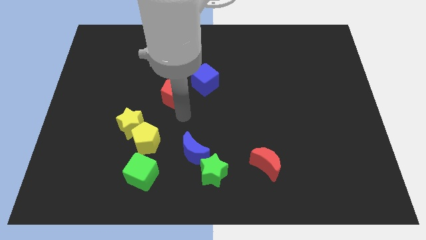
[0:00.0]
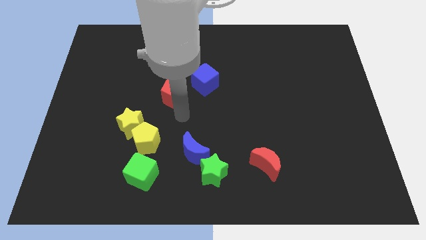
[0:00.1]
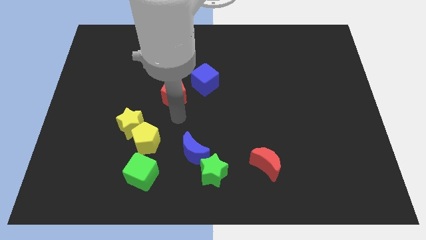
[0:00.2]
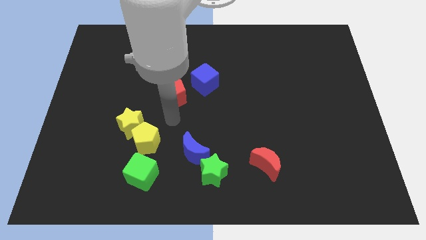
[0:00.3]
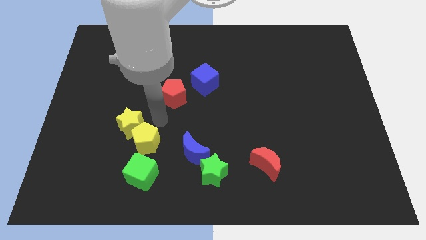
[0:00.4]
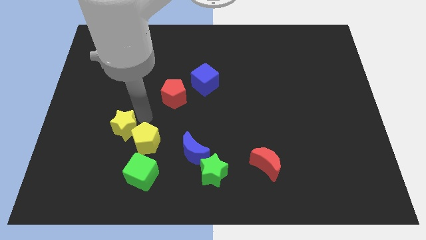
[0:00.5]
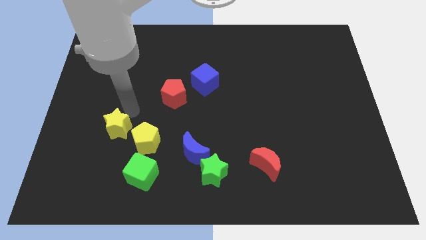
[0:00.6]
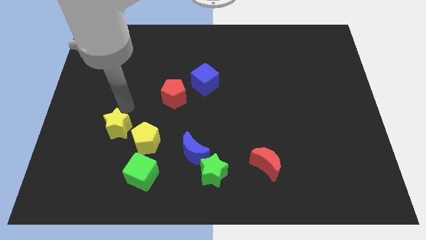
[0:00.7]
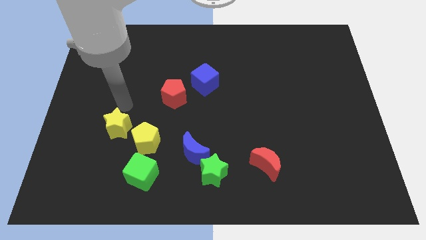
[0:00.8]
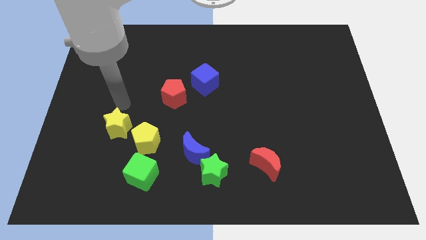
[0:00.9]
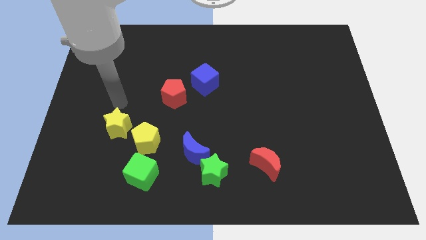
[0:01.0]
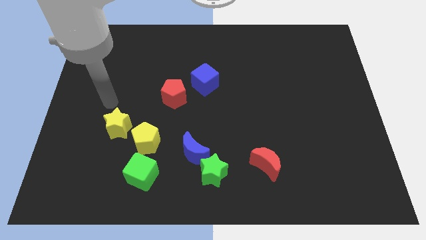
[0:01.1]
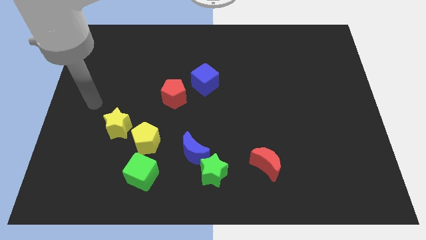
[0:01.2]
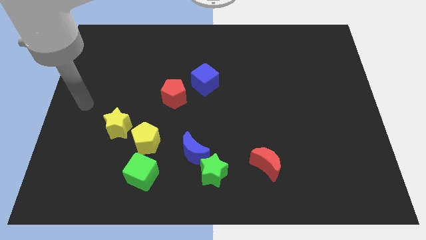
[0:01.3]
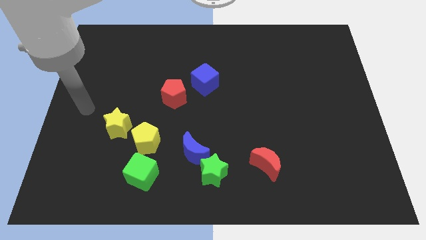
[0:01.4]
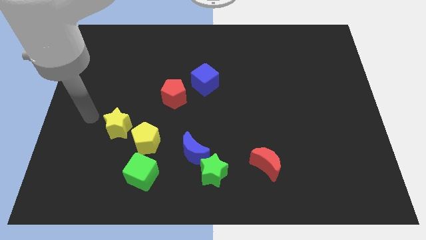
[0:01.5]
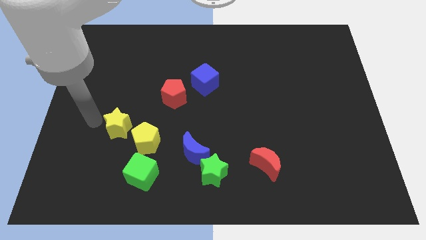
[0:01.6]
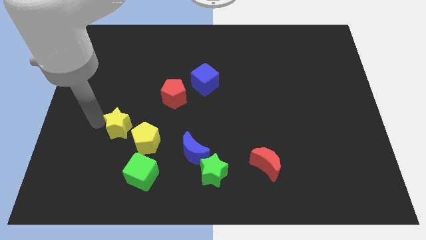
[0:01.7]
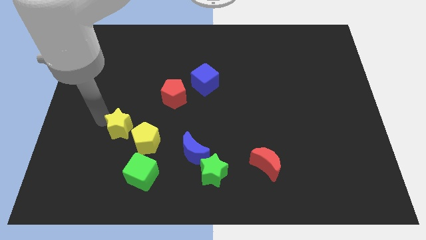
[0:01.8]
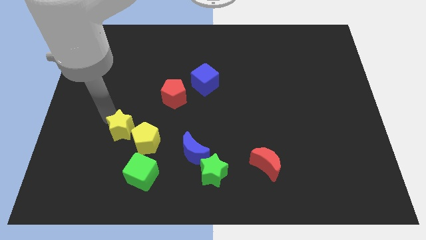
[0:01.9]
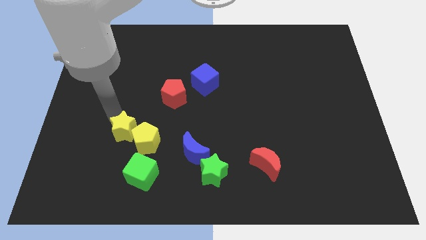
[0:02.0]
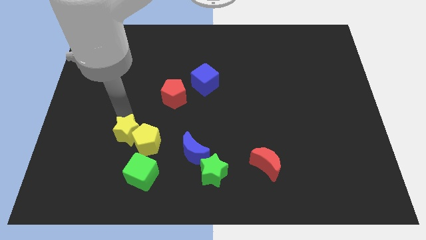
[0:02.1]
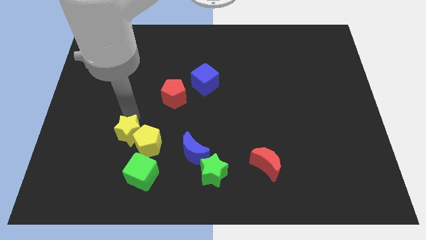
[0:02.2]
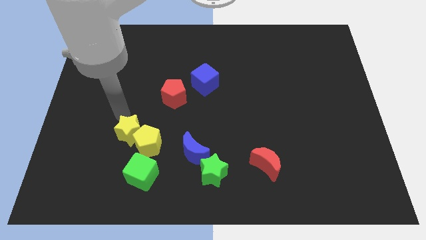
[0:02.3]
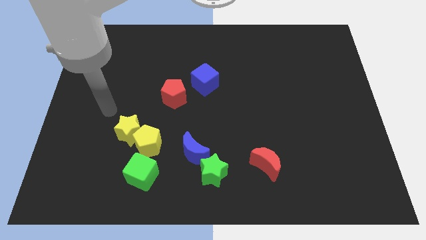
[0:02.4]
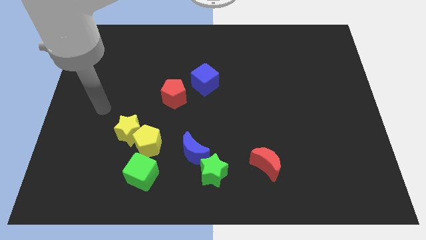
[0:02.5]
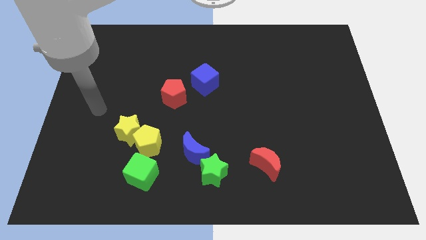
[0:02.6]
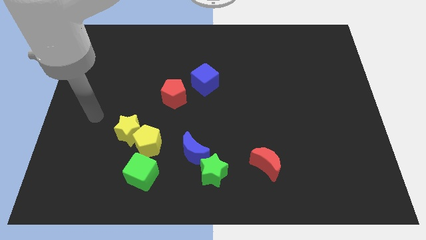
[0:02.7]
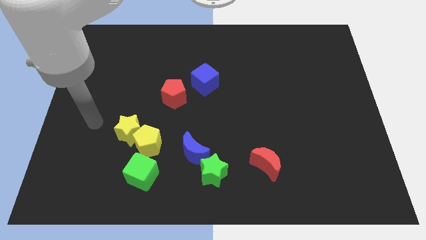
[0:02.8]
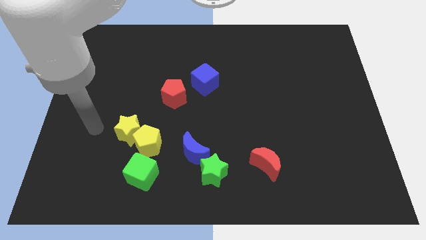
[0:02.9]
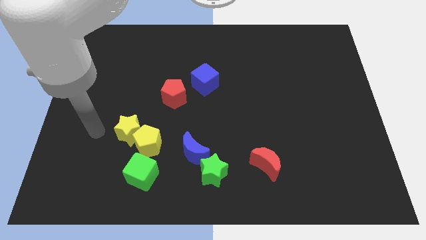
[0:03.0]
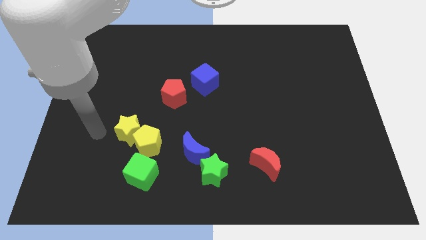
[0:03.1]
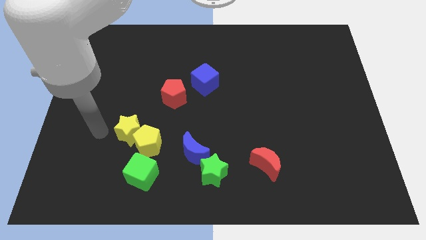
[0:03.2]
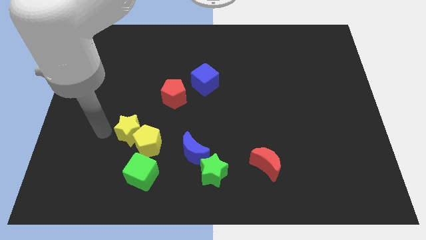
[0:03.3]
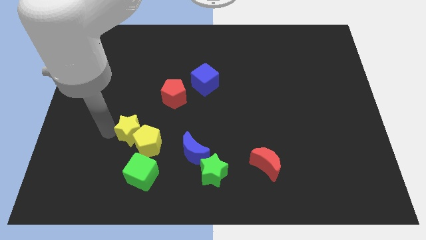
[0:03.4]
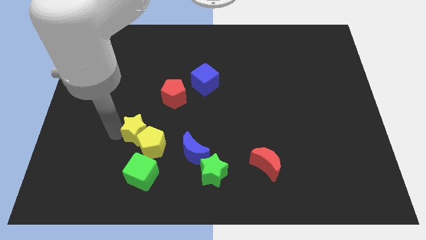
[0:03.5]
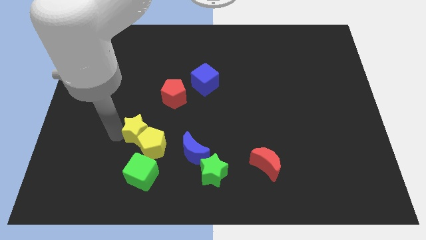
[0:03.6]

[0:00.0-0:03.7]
push the yellow star into the yellow pentagon

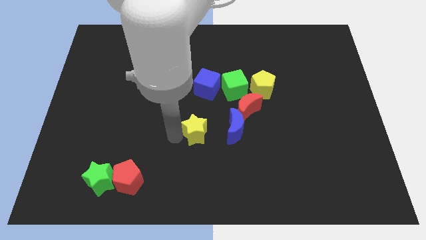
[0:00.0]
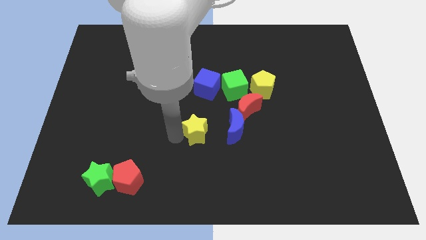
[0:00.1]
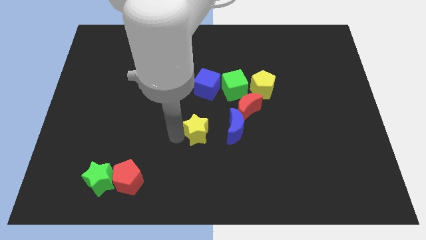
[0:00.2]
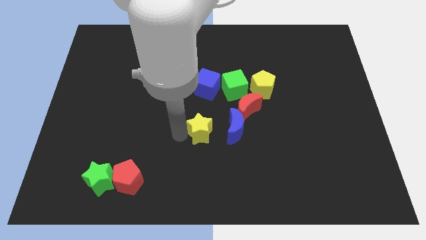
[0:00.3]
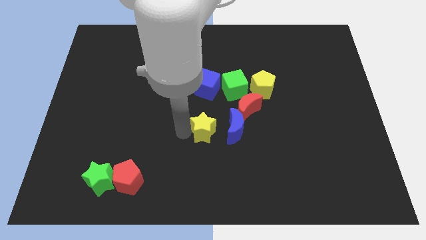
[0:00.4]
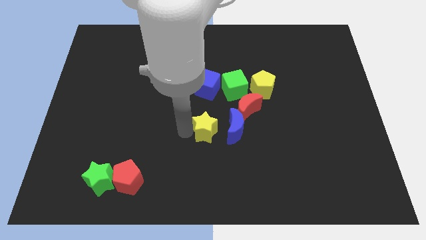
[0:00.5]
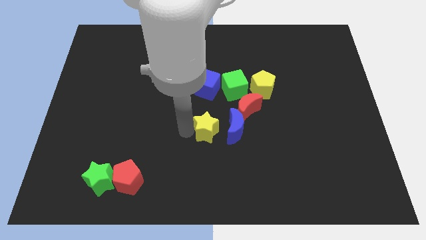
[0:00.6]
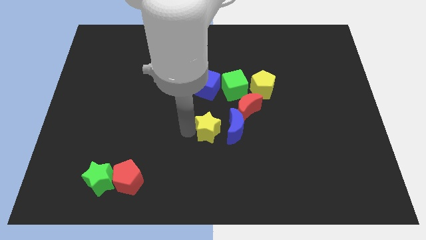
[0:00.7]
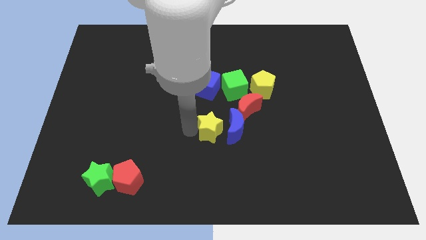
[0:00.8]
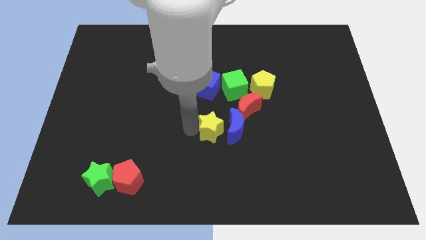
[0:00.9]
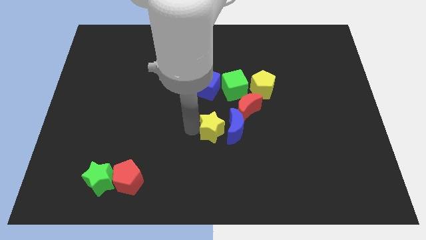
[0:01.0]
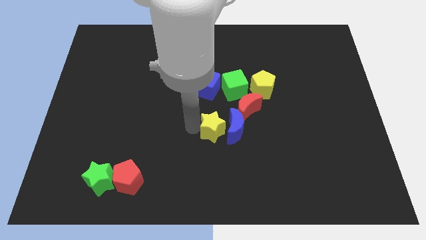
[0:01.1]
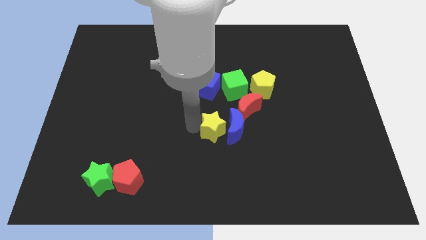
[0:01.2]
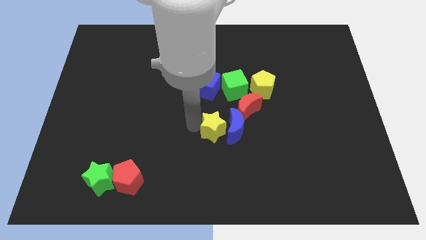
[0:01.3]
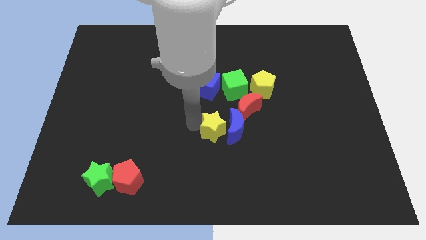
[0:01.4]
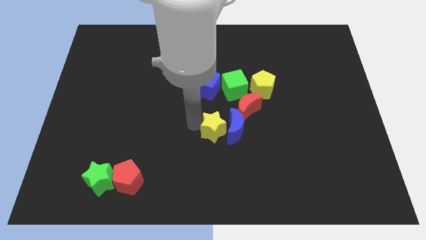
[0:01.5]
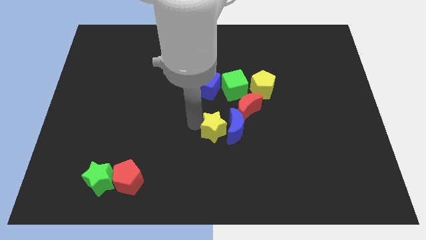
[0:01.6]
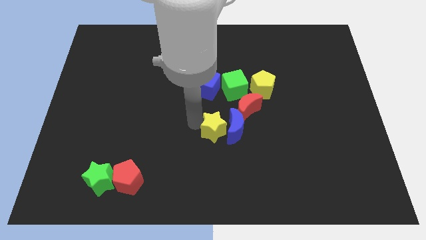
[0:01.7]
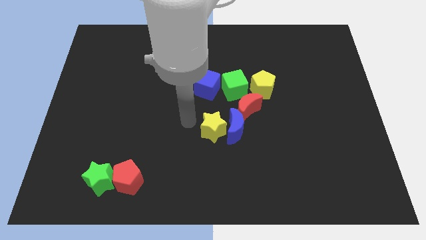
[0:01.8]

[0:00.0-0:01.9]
push the yellow star towards blue crescent

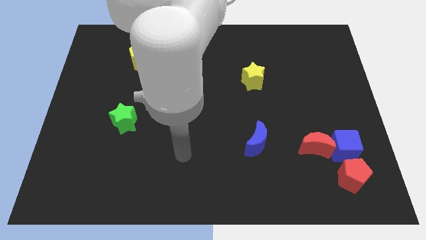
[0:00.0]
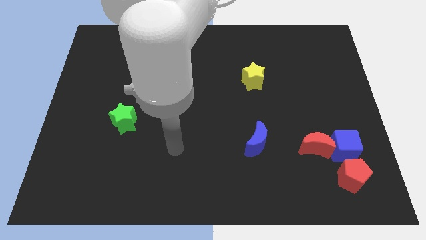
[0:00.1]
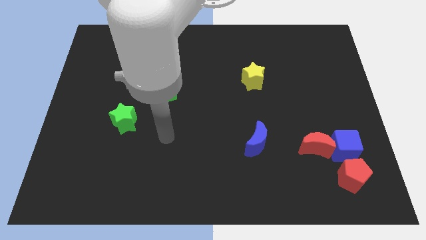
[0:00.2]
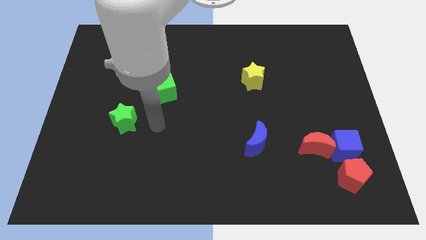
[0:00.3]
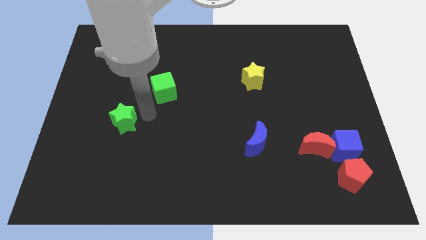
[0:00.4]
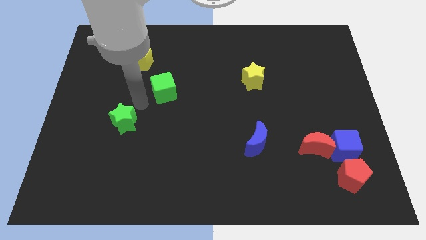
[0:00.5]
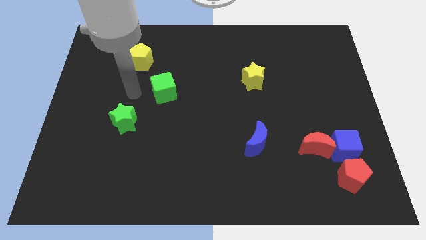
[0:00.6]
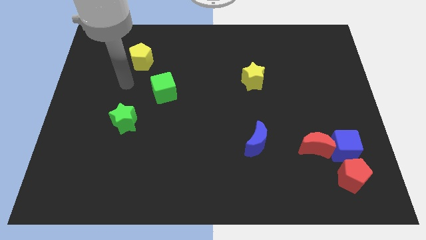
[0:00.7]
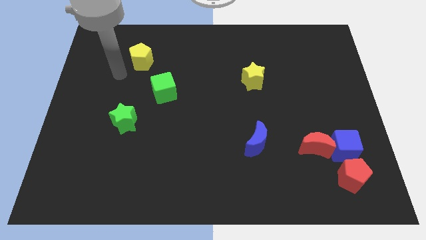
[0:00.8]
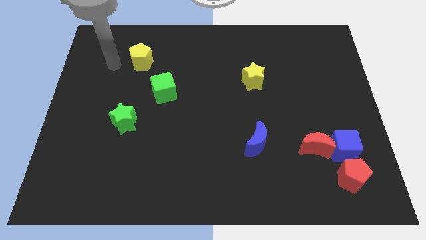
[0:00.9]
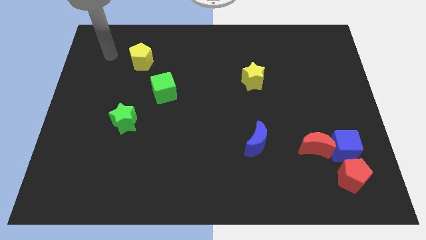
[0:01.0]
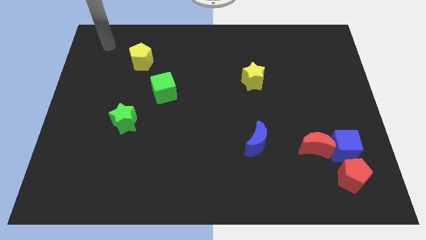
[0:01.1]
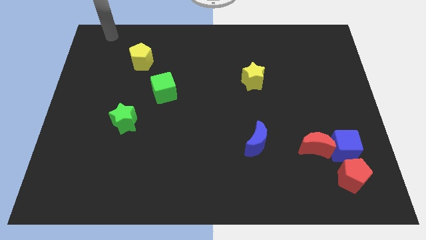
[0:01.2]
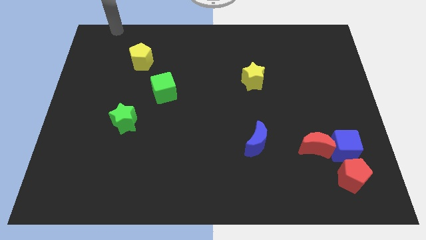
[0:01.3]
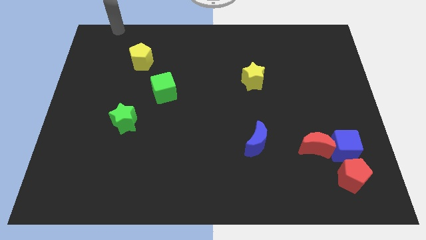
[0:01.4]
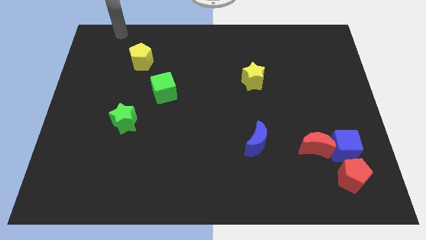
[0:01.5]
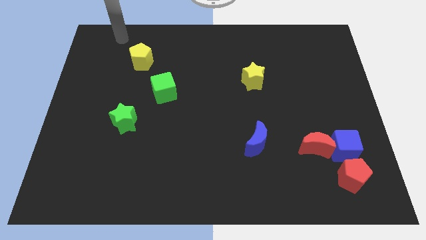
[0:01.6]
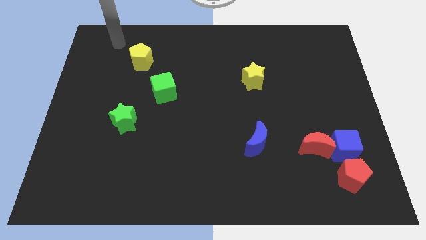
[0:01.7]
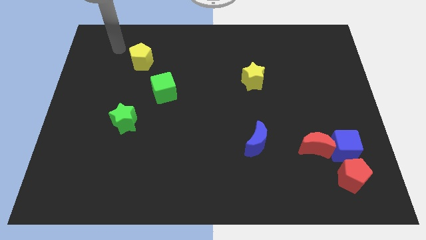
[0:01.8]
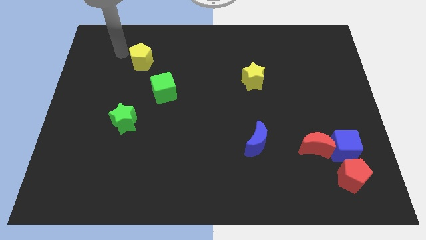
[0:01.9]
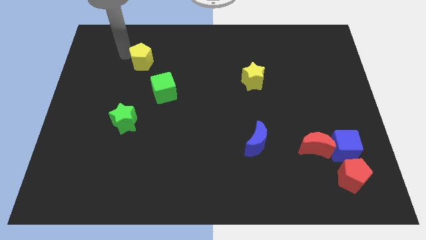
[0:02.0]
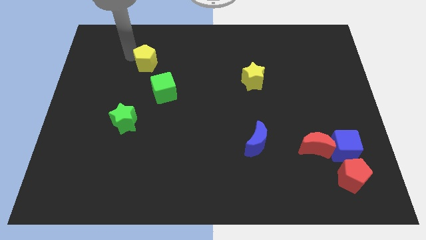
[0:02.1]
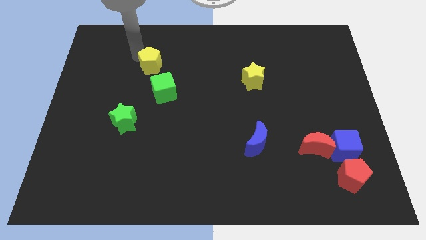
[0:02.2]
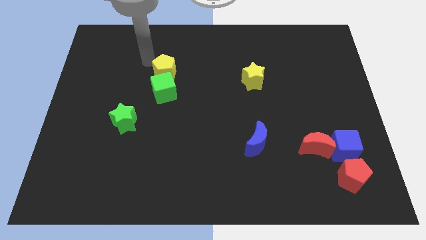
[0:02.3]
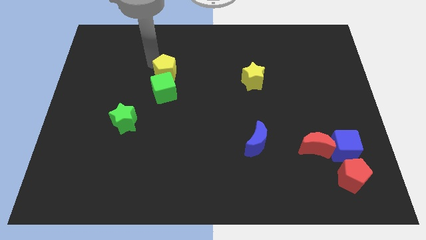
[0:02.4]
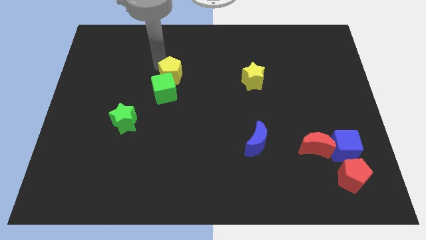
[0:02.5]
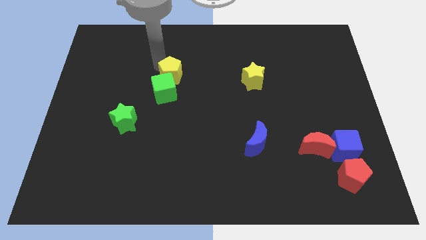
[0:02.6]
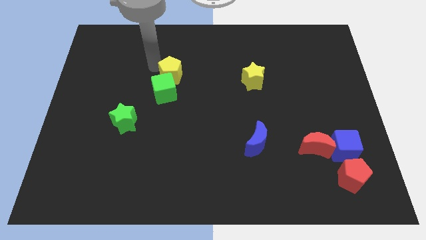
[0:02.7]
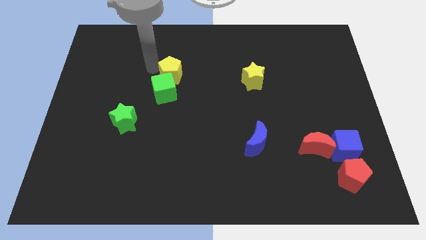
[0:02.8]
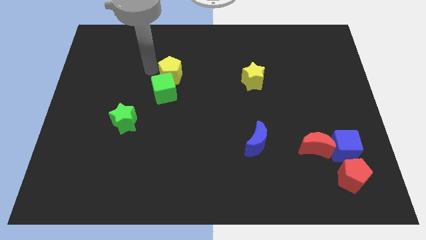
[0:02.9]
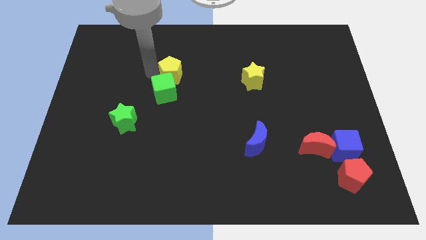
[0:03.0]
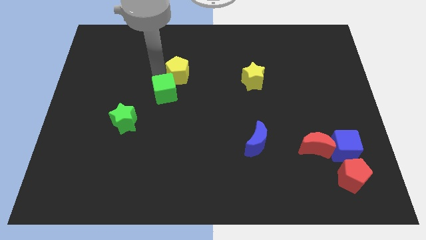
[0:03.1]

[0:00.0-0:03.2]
move the yellow pentagon into the green cube
